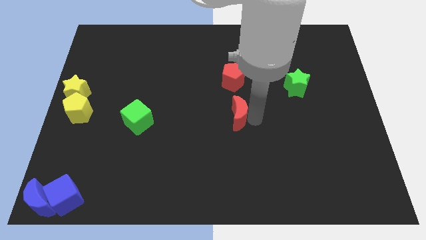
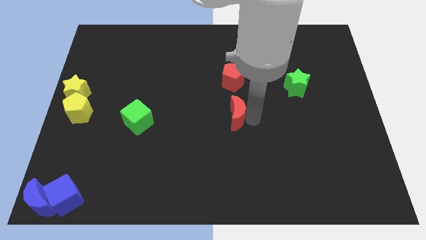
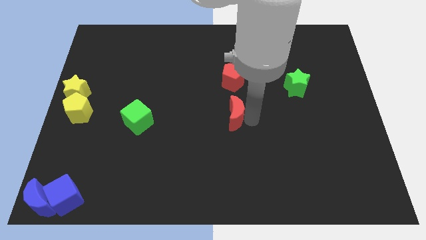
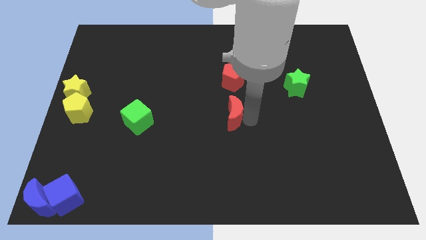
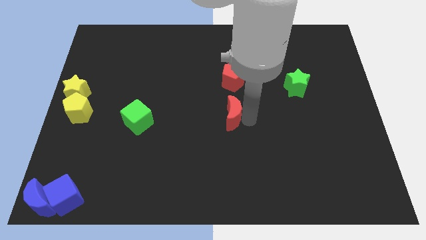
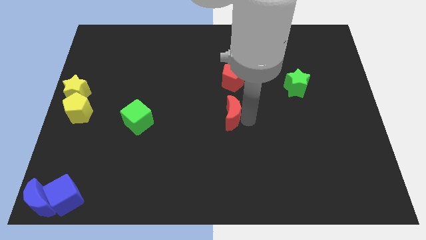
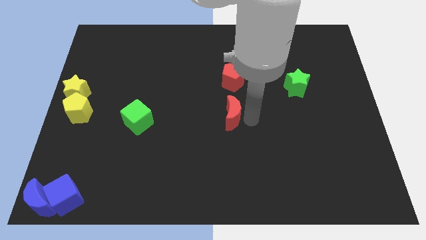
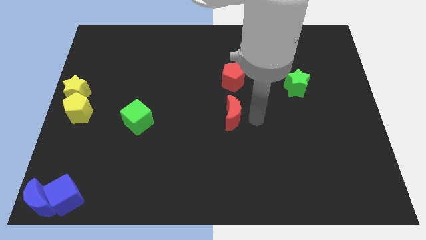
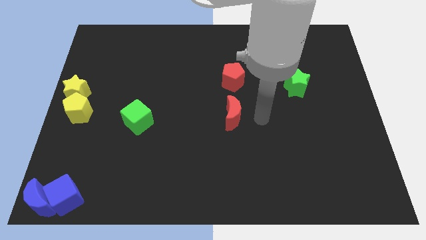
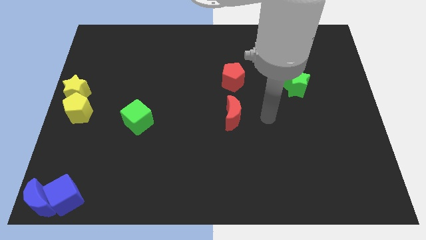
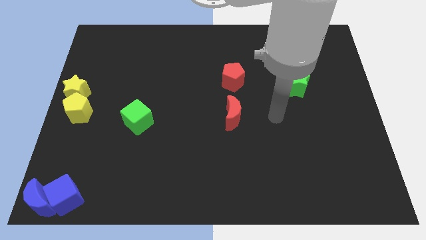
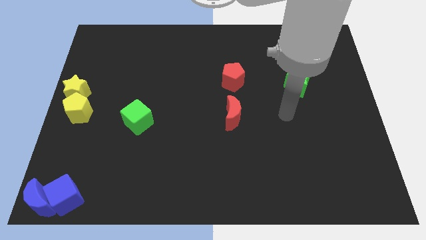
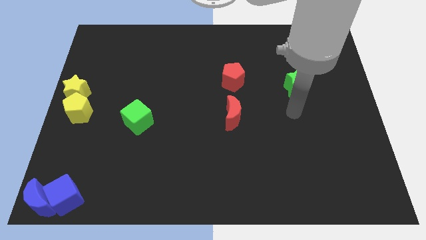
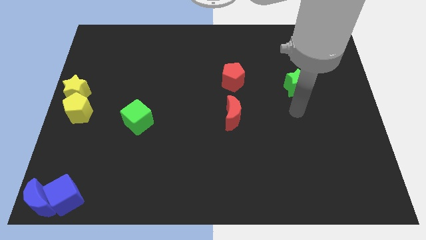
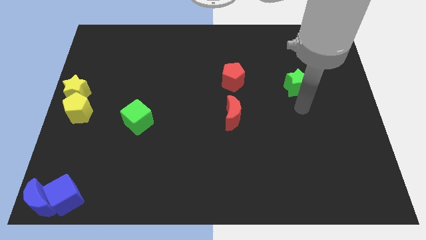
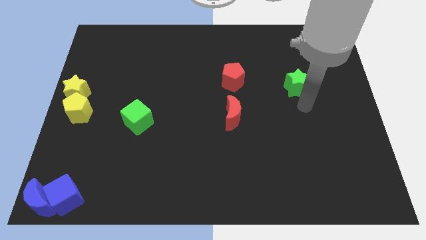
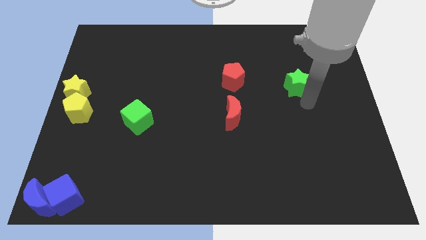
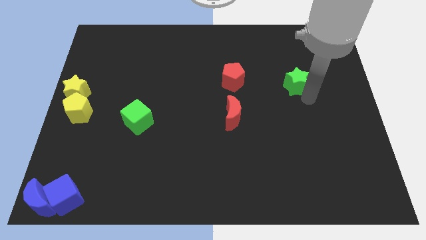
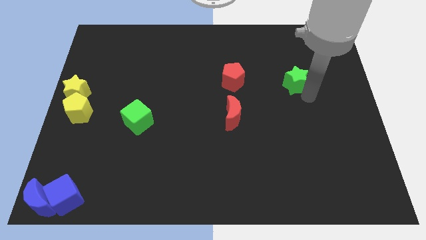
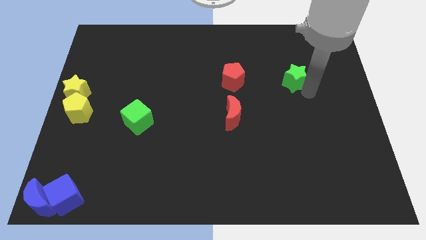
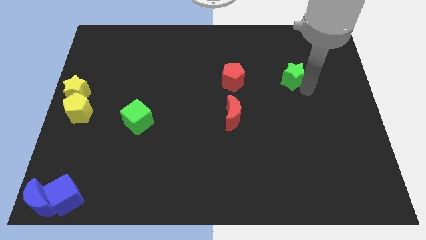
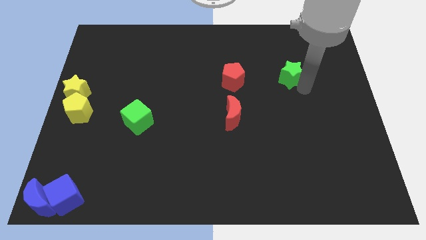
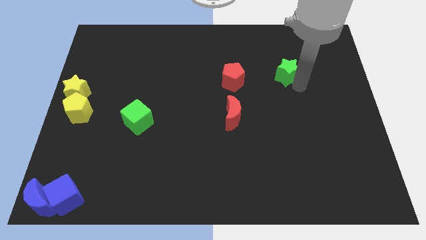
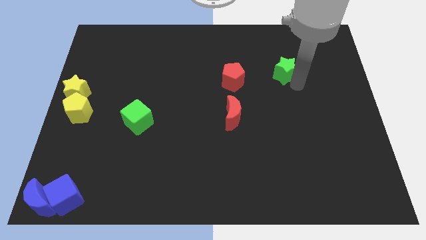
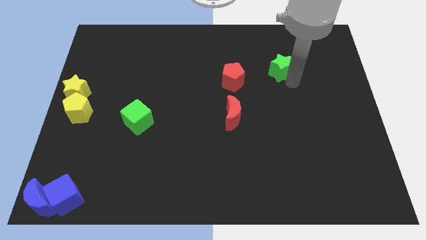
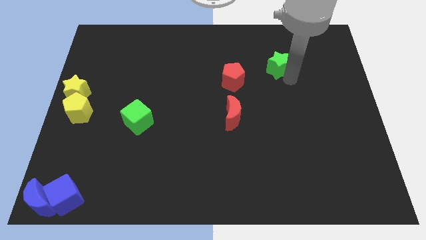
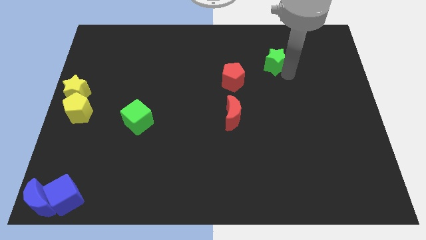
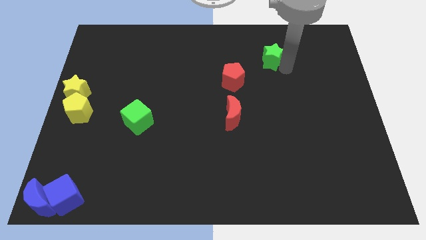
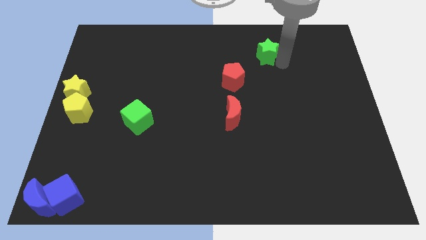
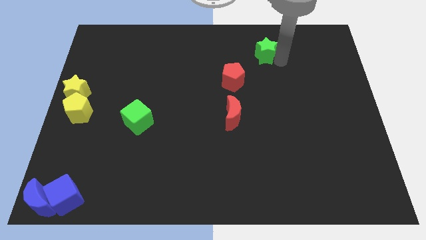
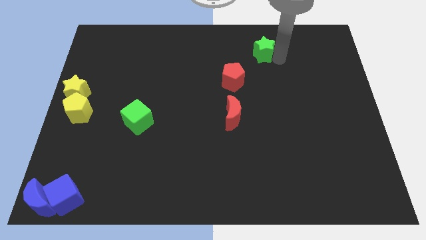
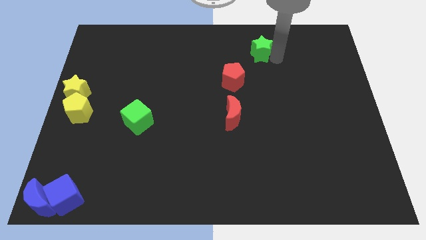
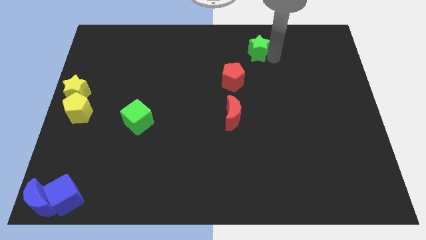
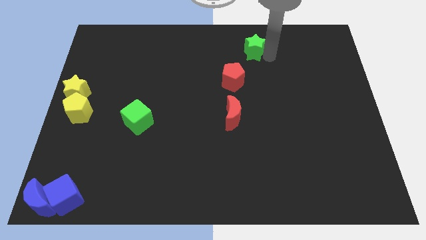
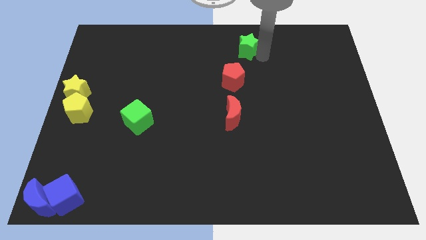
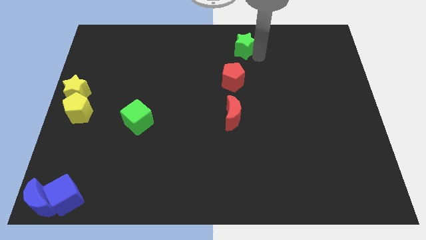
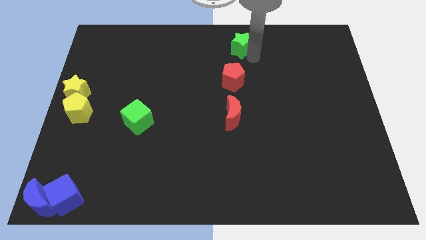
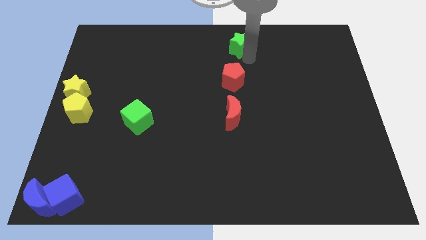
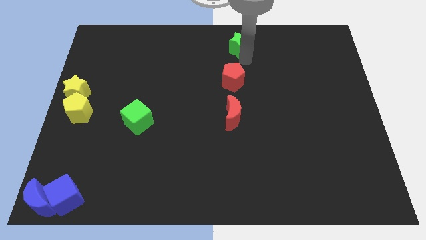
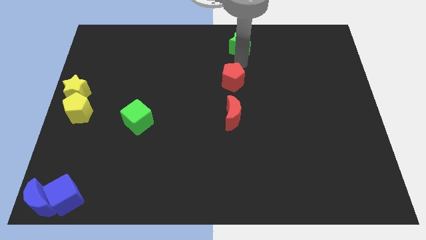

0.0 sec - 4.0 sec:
slide the green star above the red pentagon

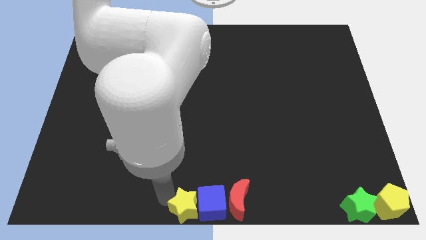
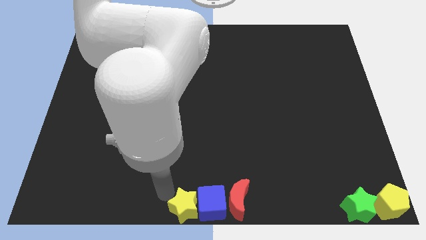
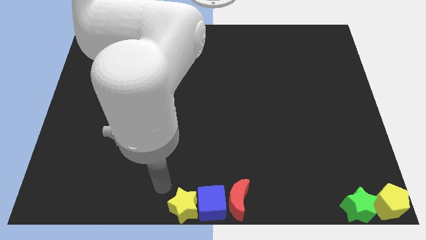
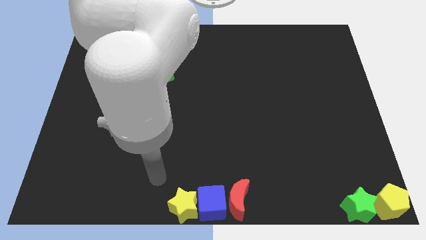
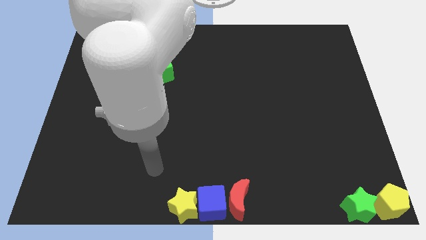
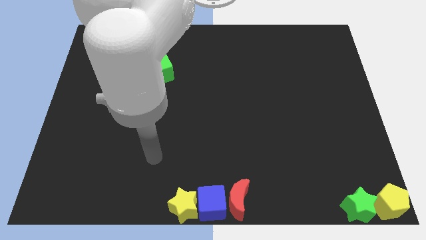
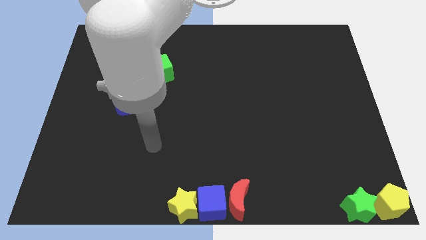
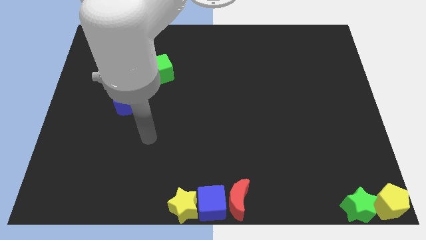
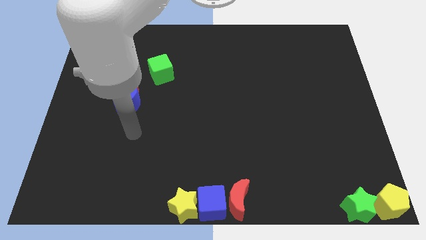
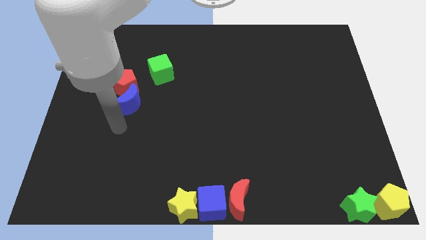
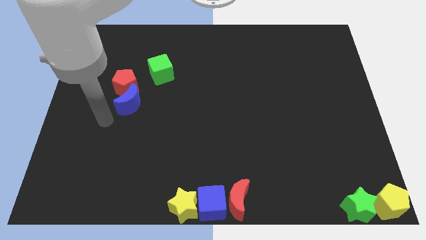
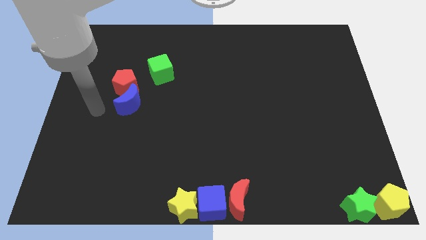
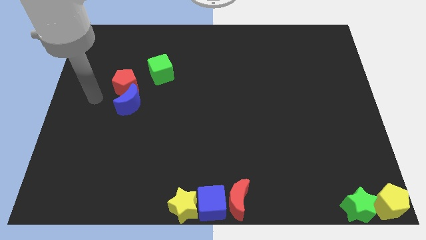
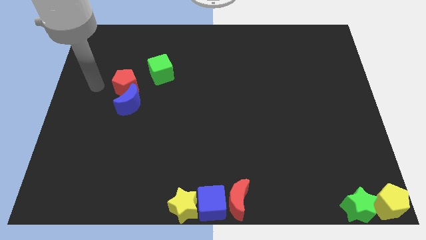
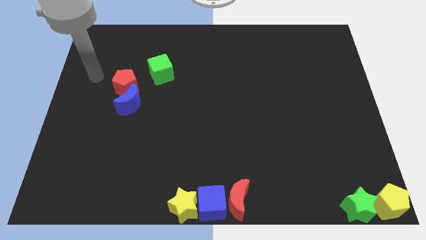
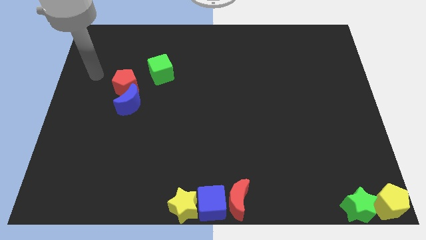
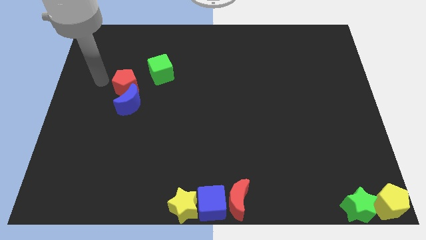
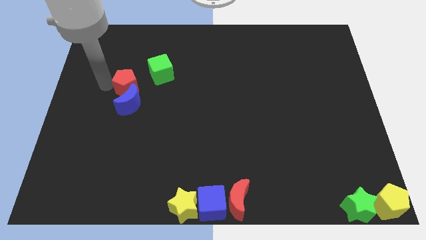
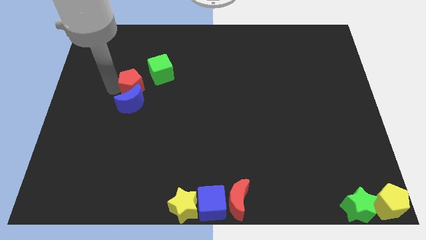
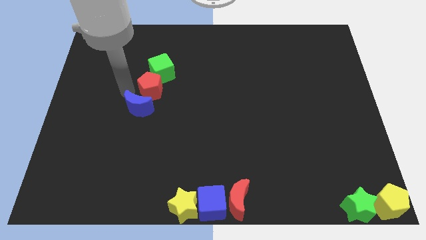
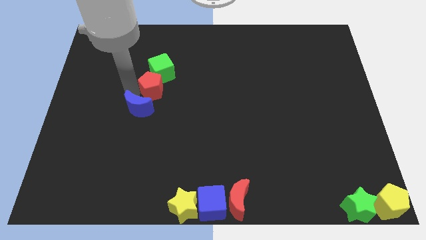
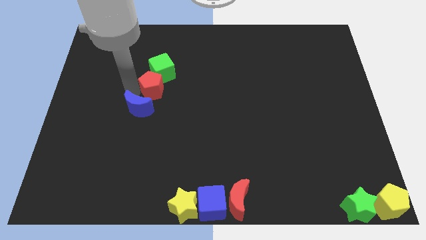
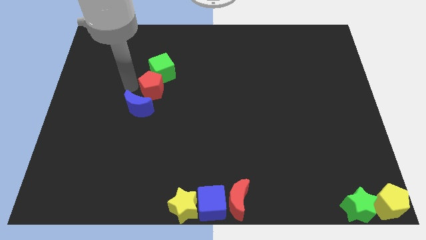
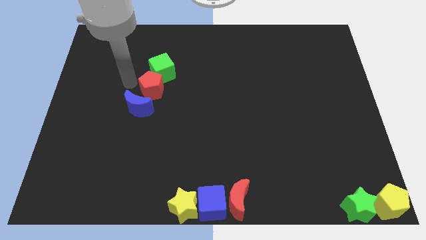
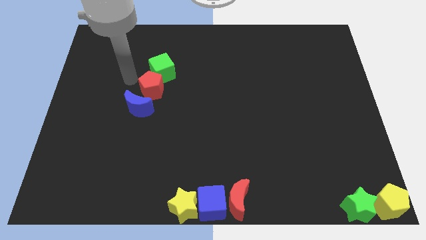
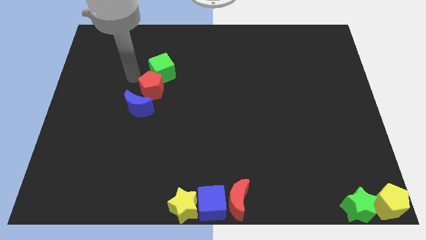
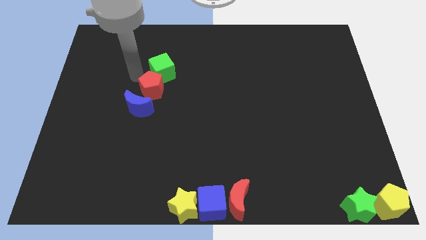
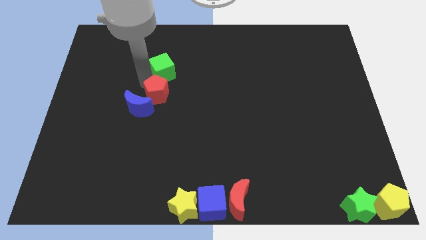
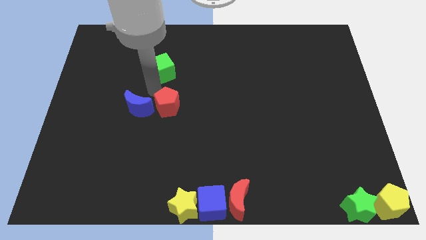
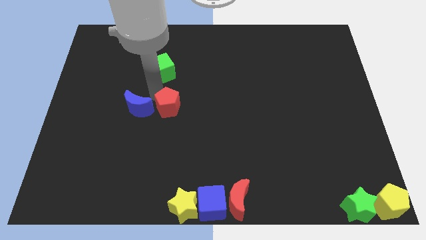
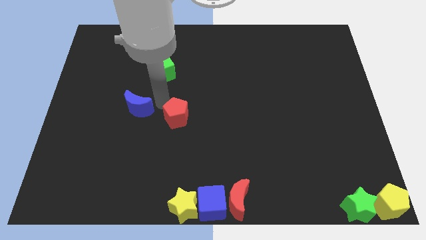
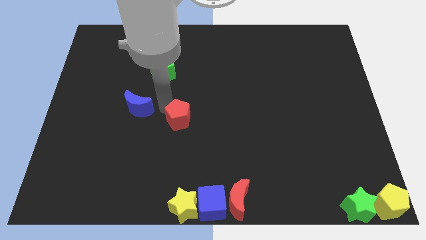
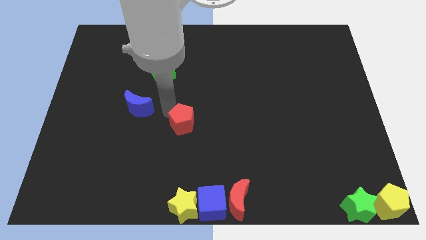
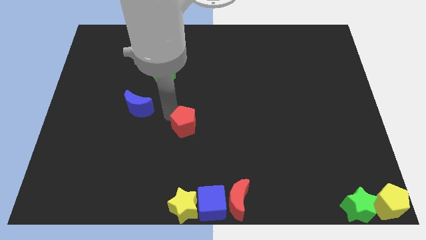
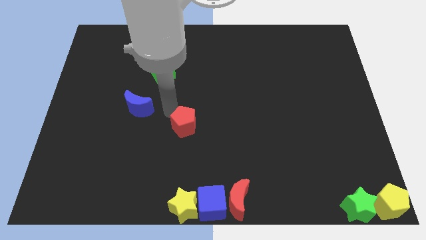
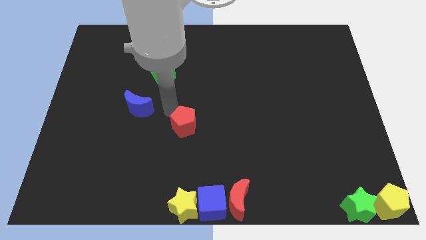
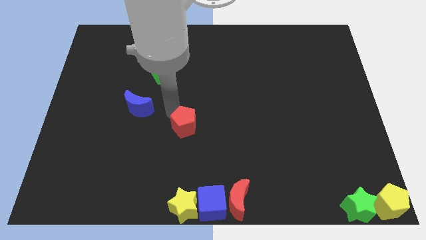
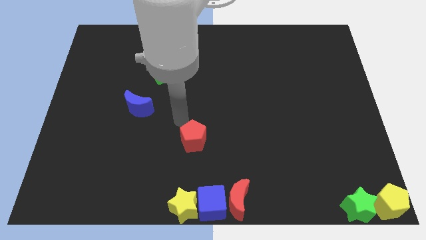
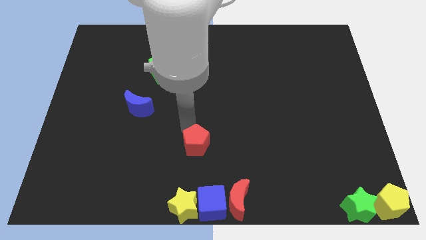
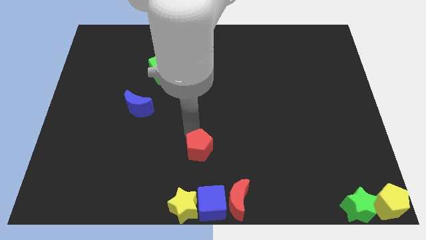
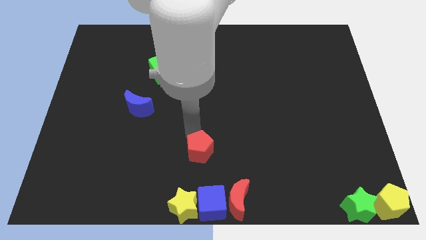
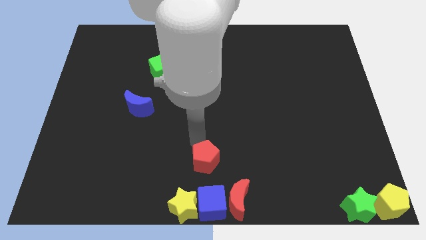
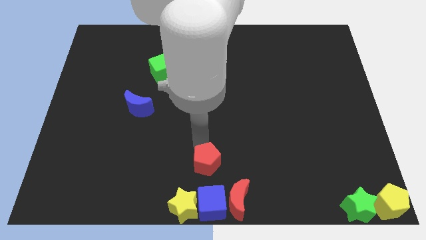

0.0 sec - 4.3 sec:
push the red pentagon to the top of the blue cube

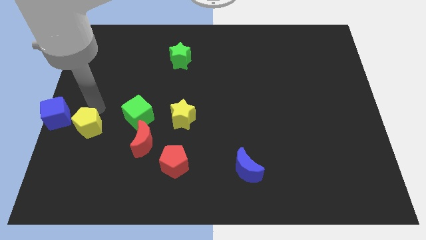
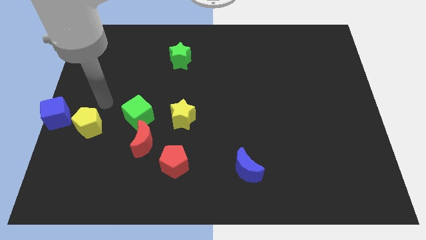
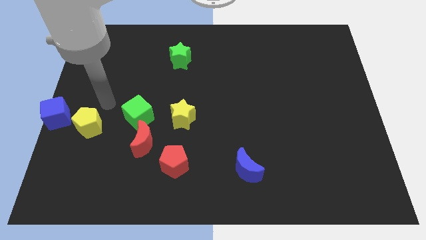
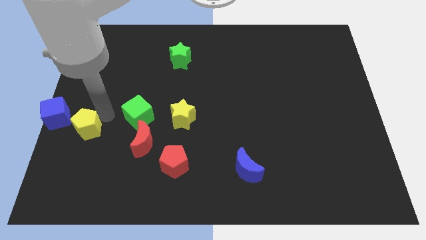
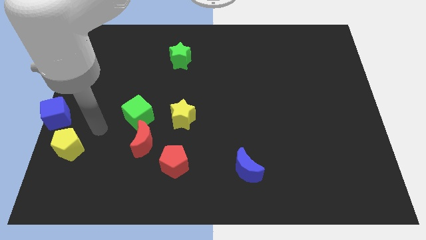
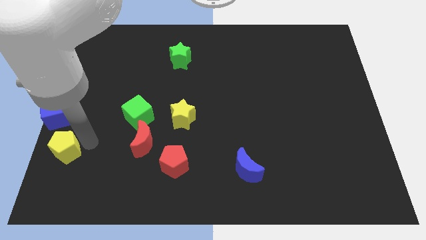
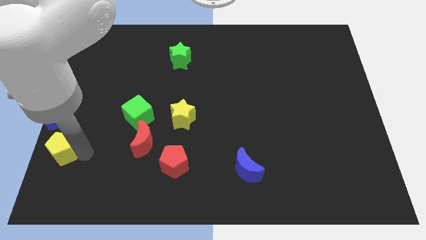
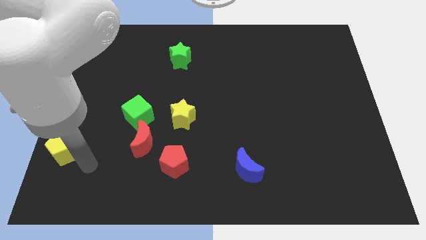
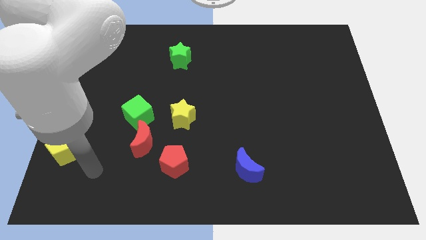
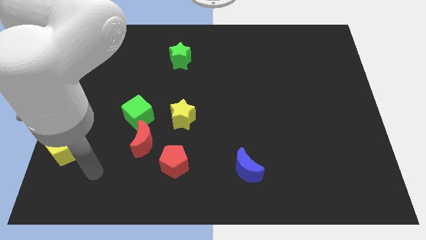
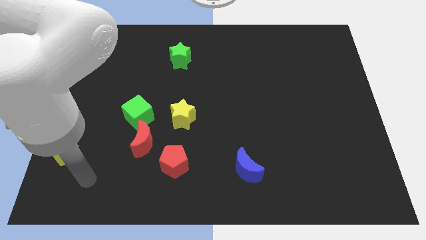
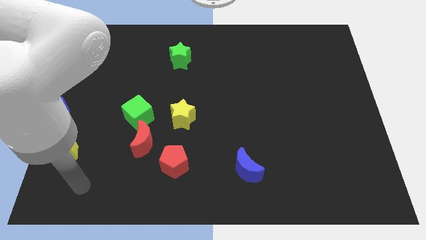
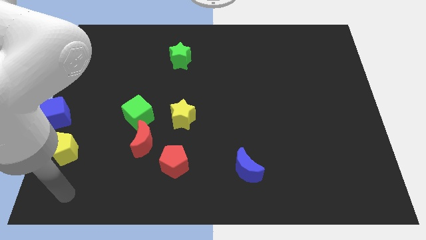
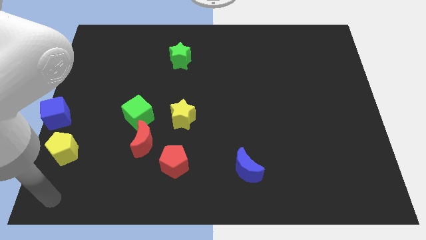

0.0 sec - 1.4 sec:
place the yellow pentagon at the bottom right side of blue cube
